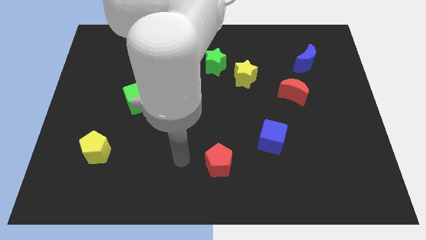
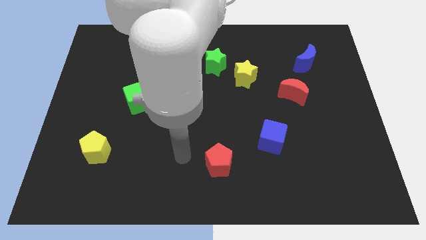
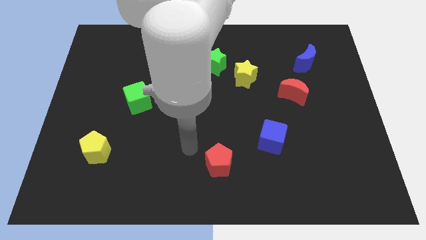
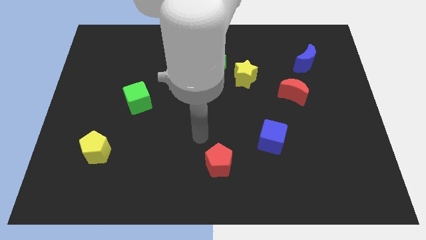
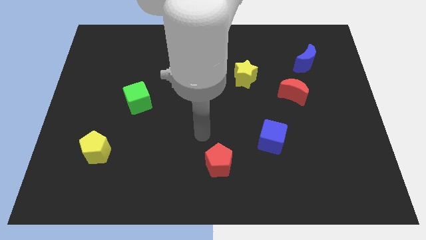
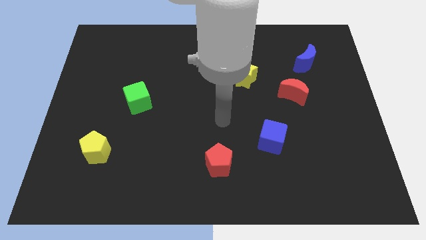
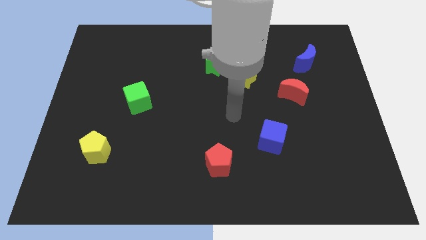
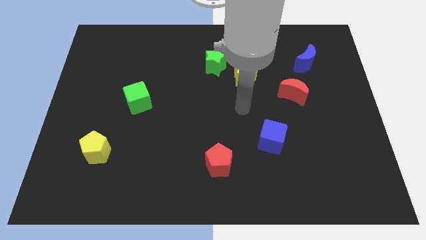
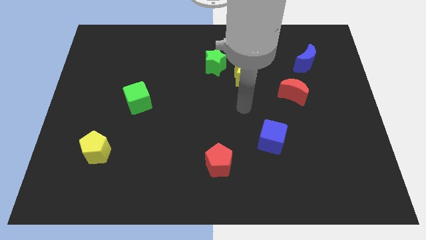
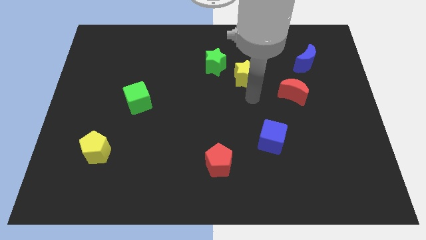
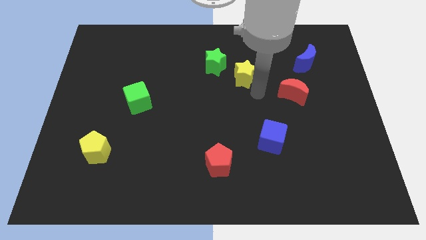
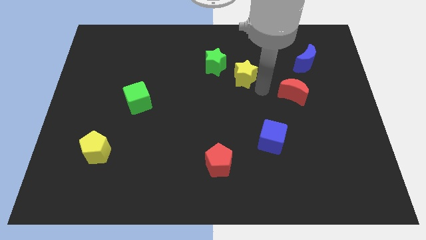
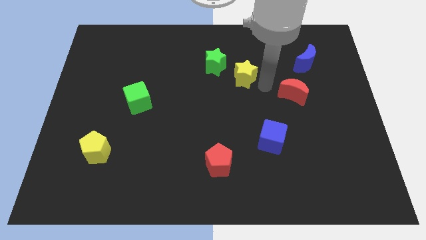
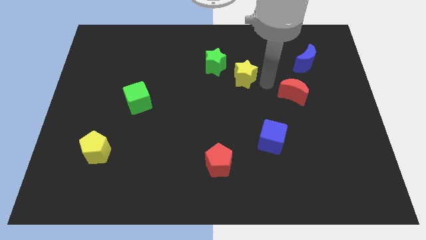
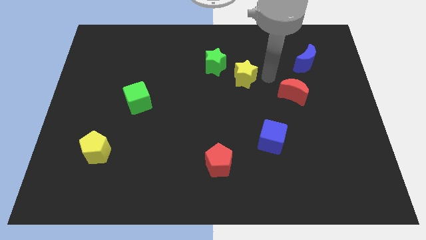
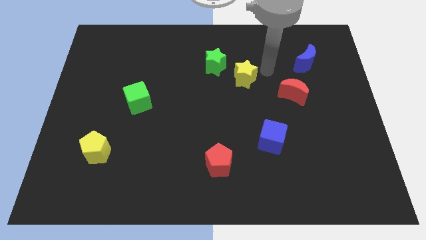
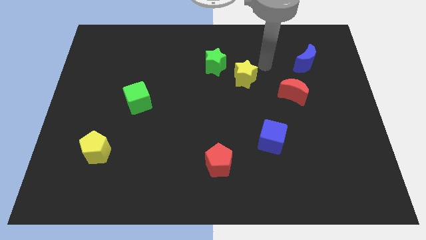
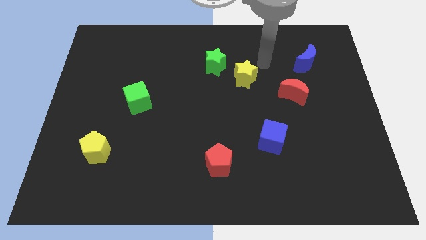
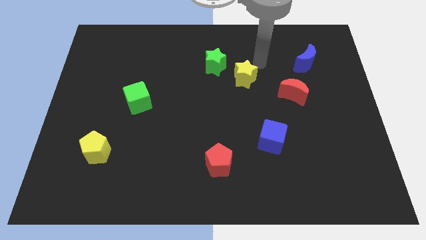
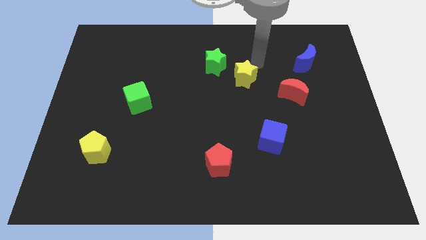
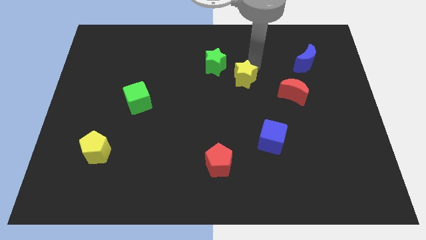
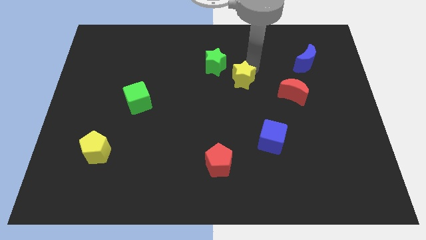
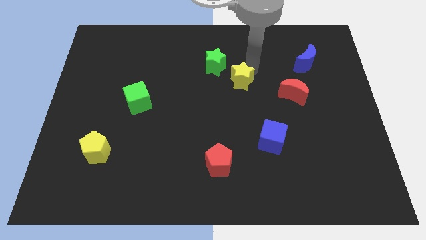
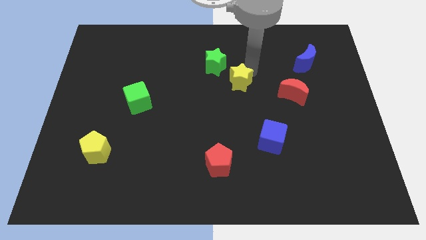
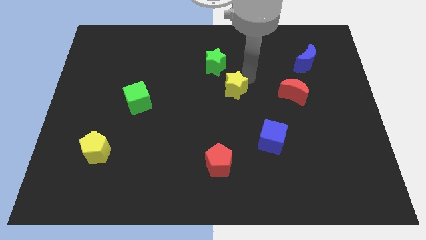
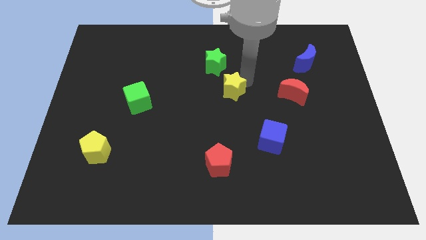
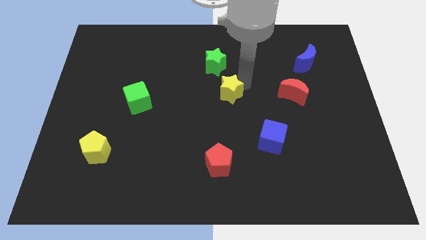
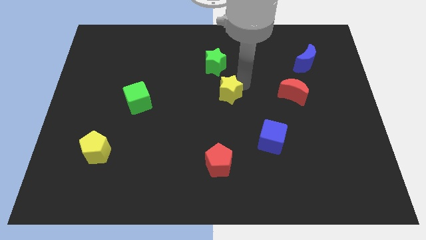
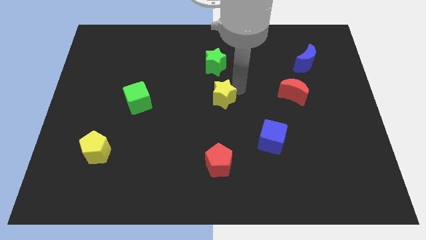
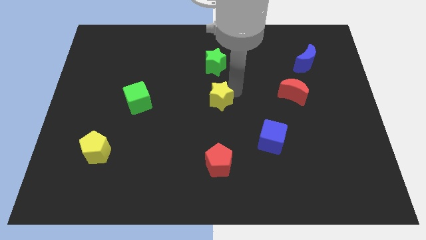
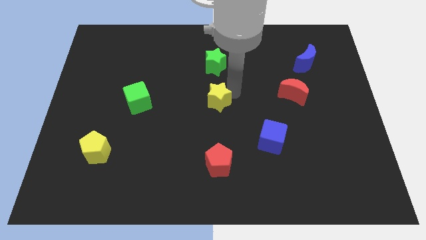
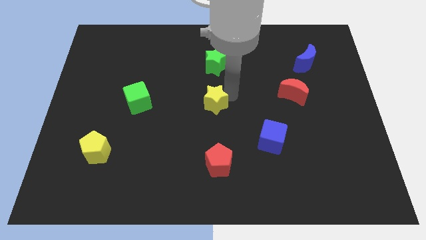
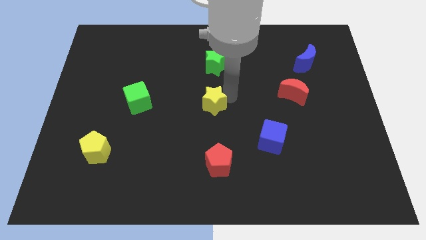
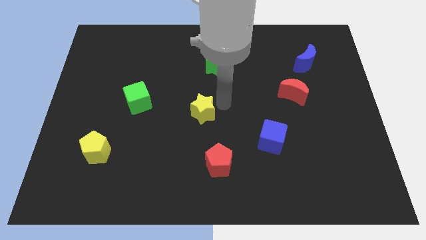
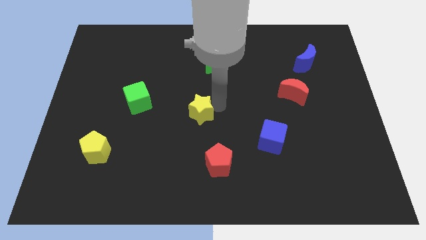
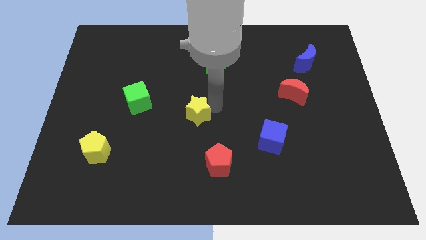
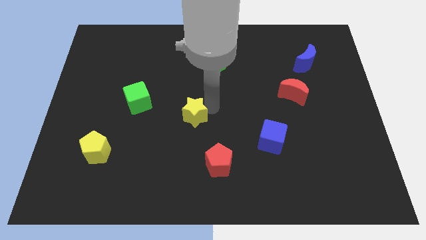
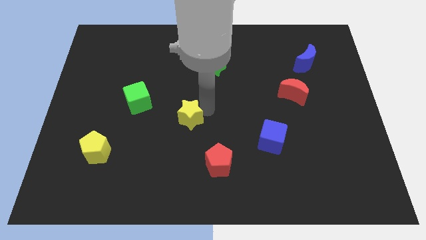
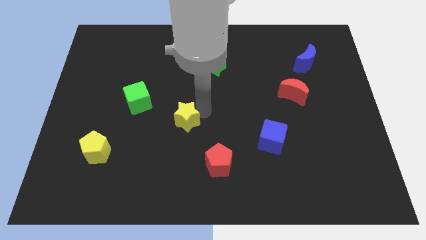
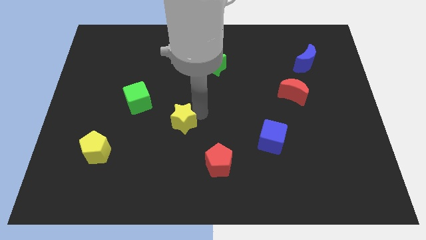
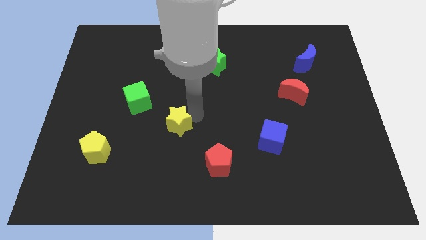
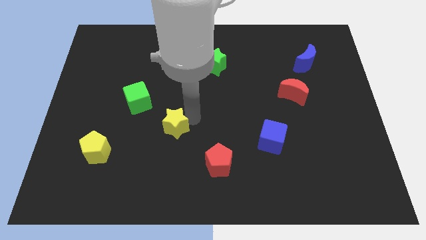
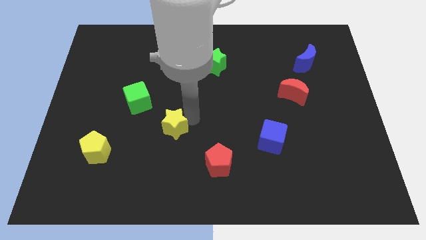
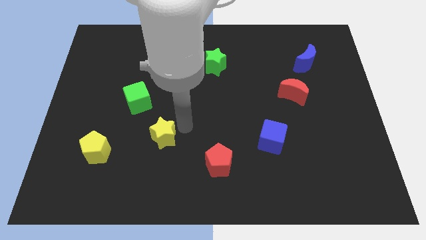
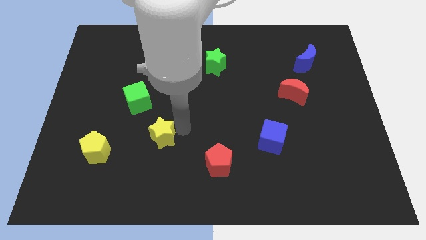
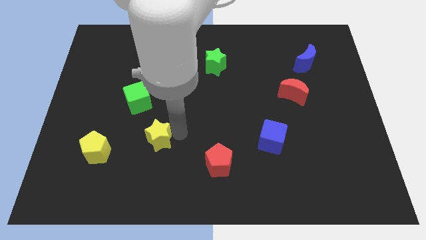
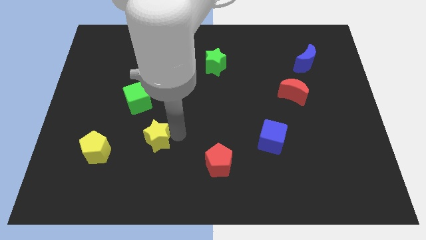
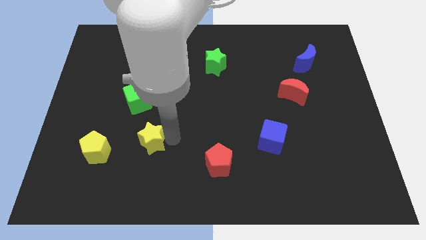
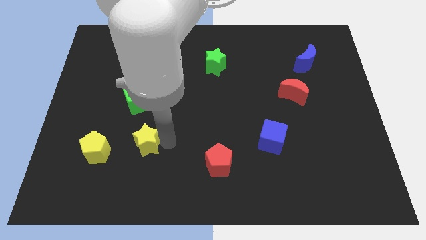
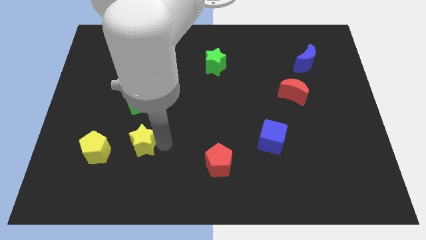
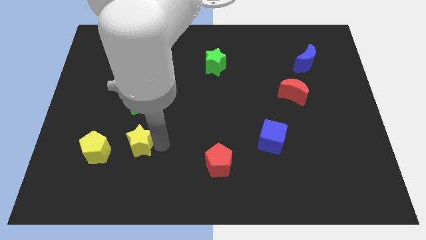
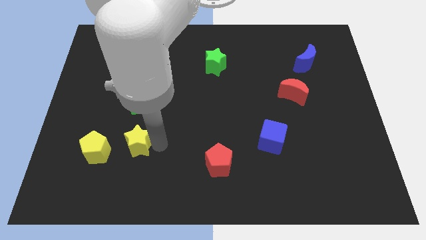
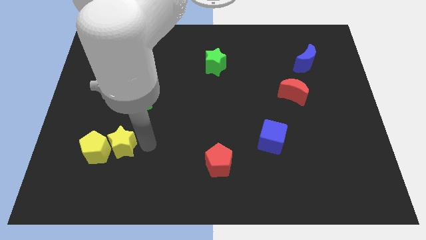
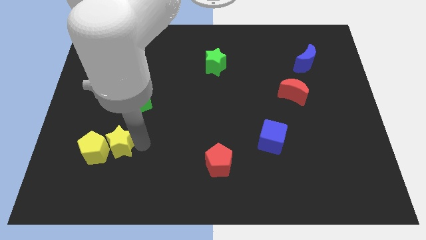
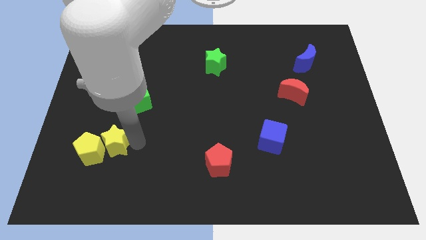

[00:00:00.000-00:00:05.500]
push the yellow star towards the yellow pentagon

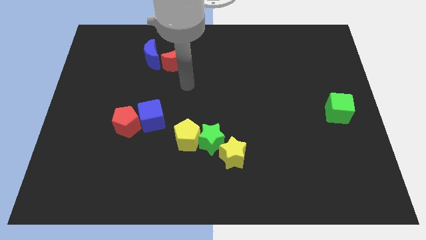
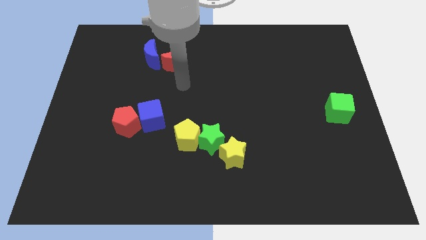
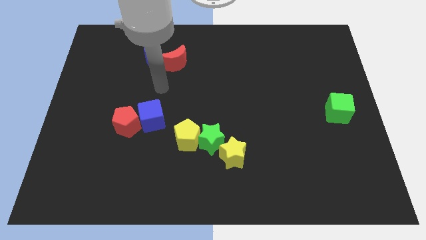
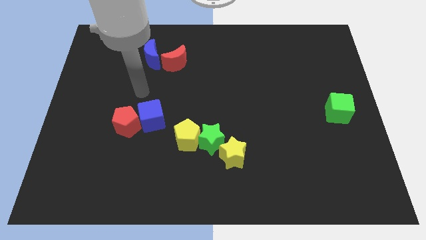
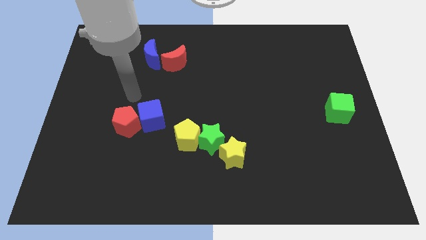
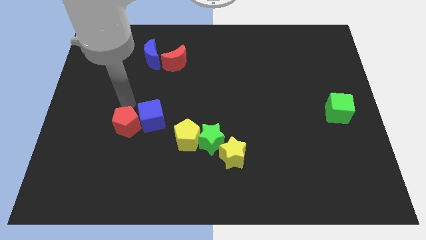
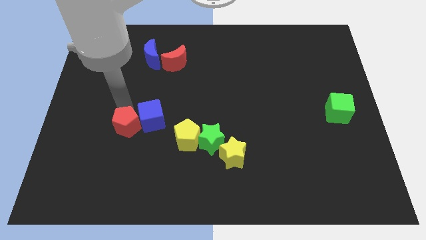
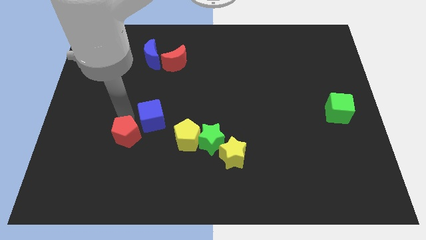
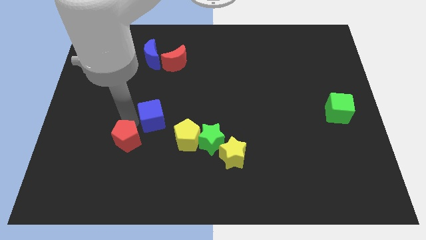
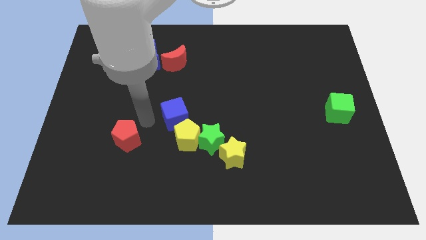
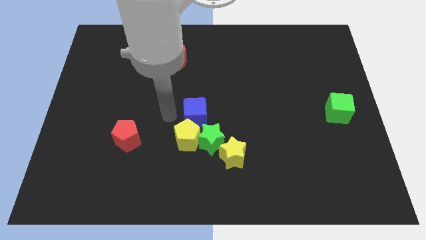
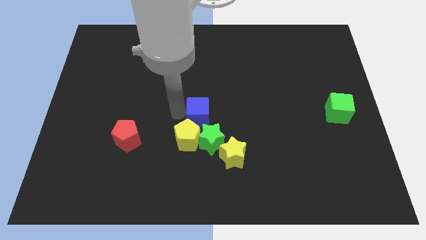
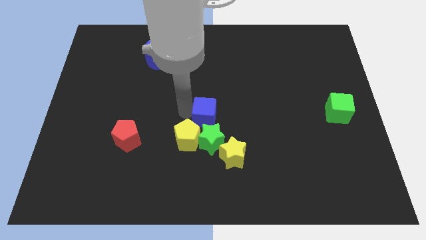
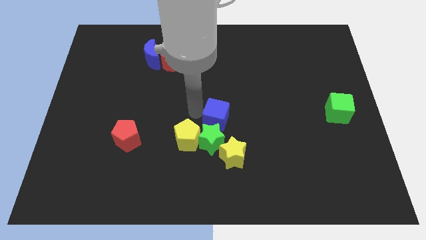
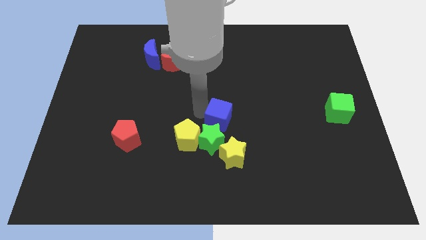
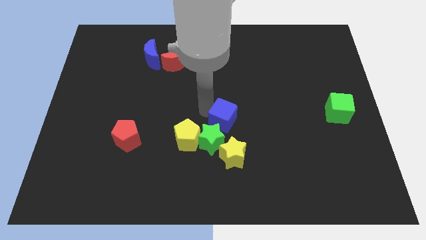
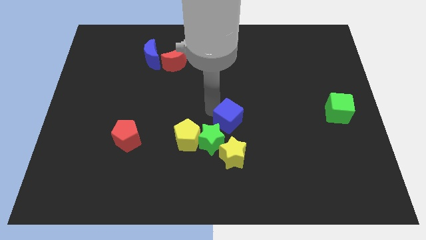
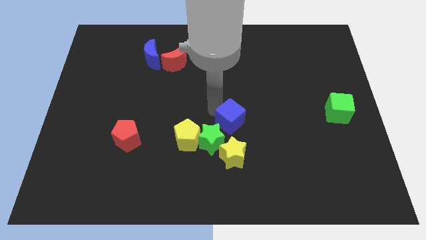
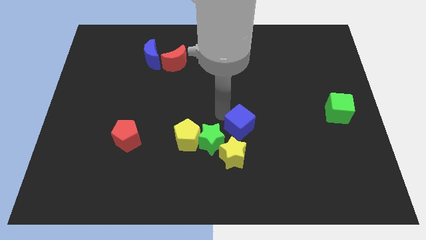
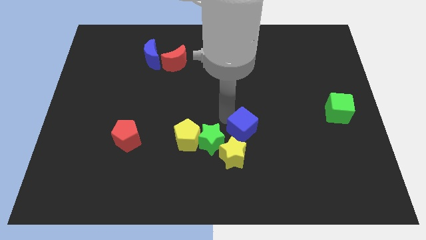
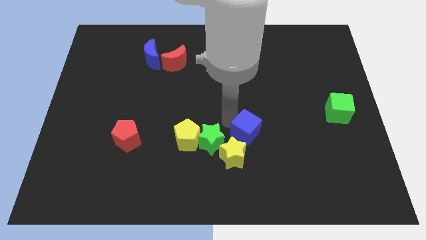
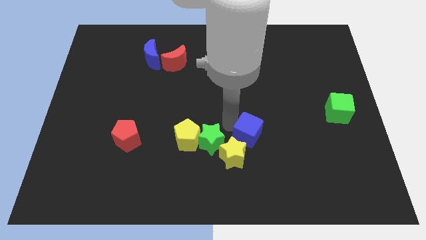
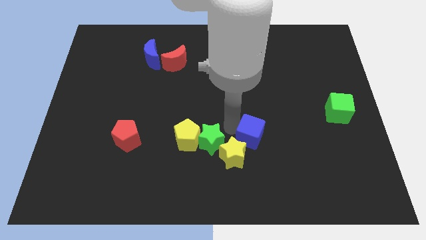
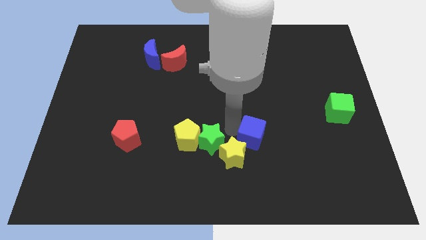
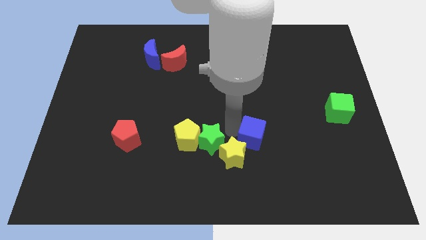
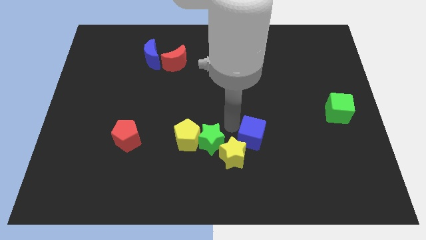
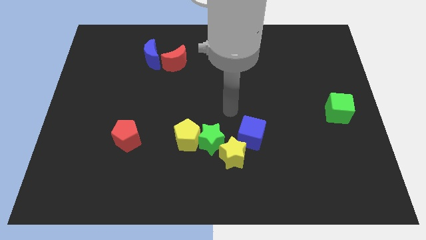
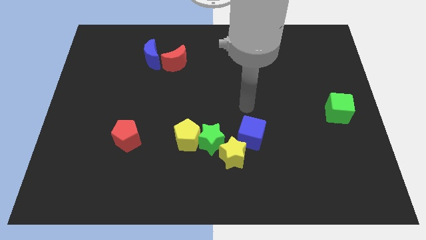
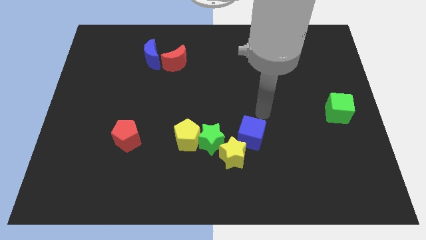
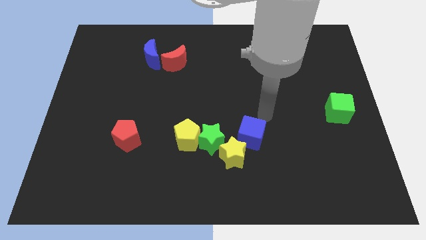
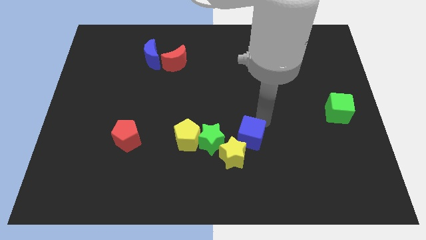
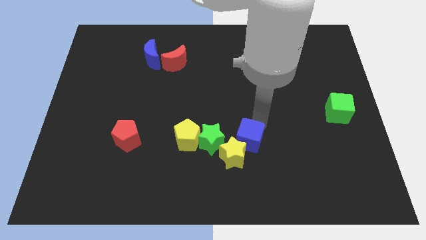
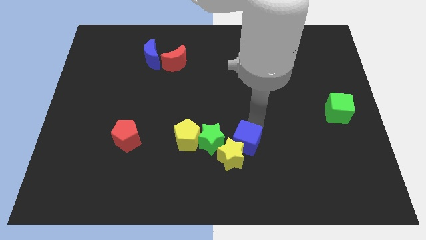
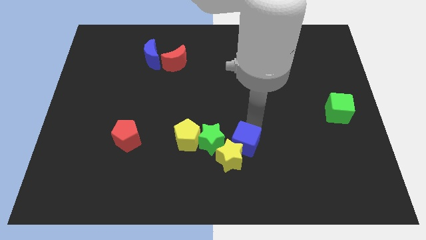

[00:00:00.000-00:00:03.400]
move the blue cube to the yellow star
